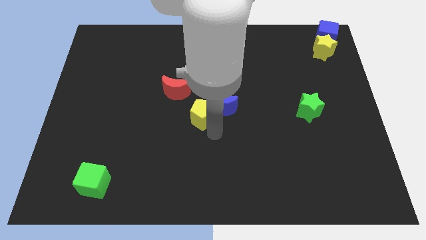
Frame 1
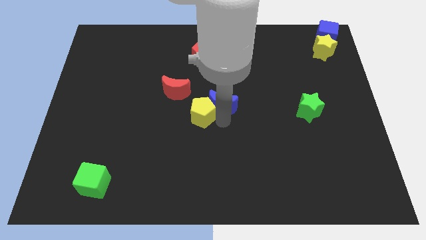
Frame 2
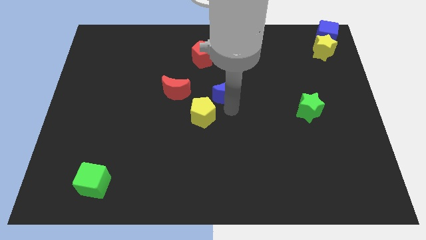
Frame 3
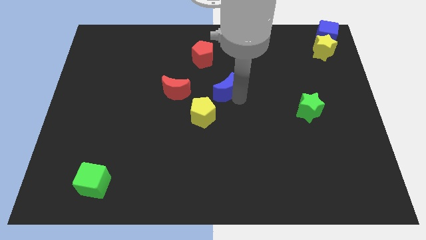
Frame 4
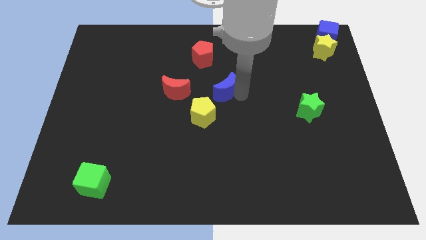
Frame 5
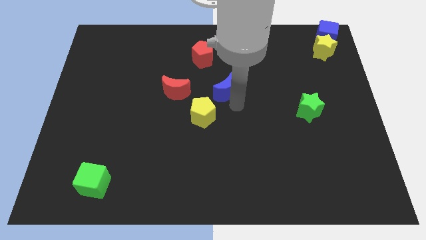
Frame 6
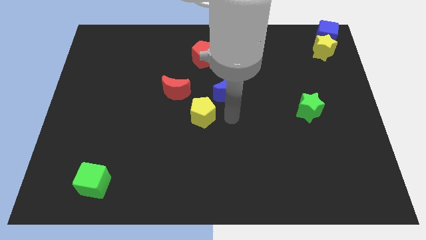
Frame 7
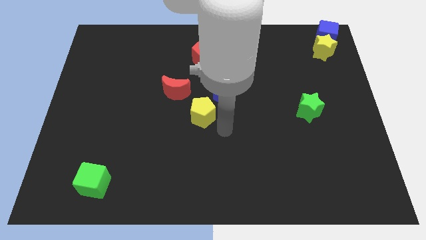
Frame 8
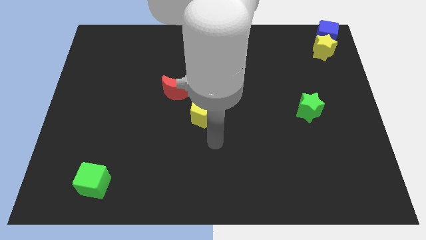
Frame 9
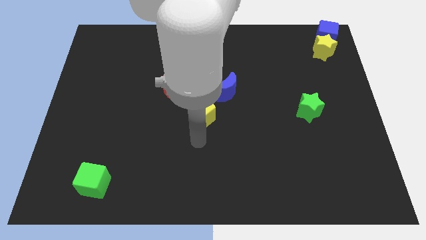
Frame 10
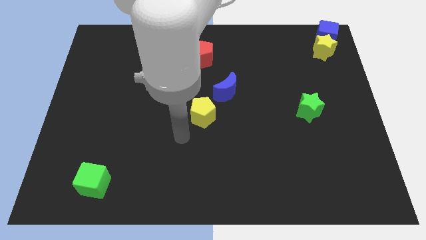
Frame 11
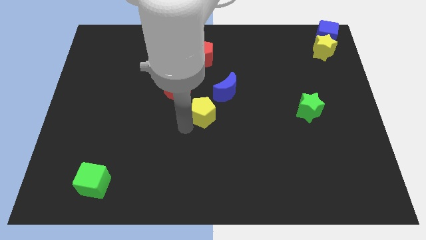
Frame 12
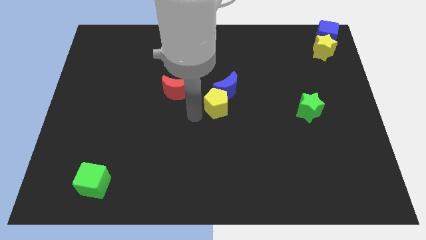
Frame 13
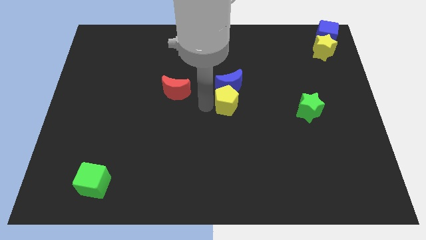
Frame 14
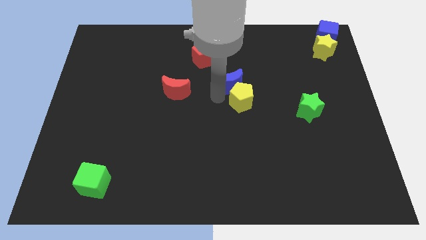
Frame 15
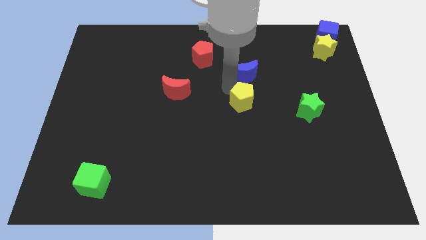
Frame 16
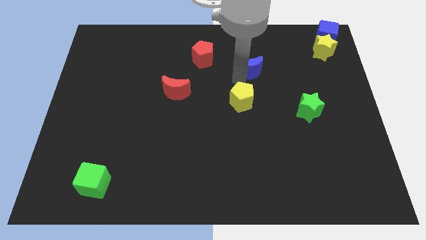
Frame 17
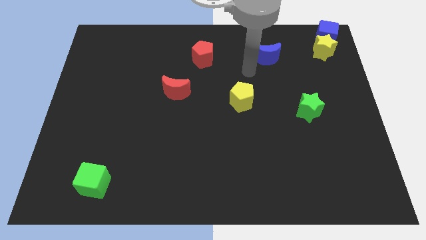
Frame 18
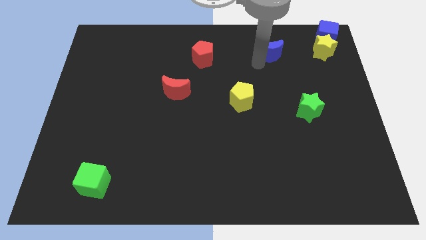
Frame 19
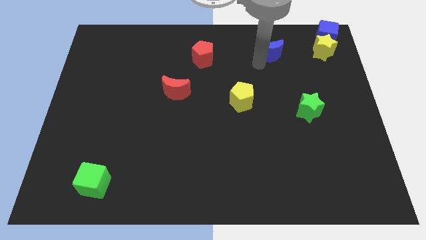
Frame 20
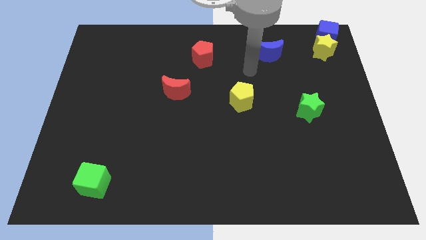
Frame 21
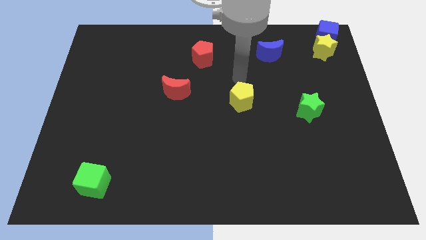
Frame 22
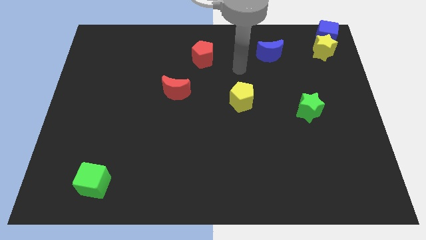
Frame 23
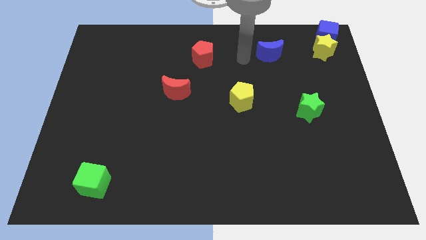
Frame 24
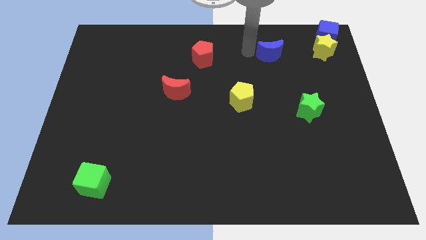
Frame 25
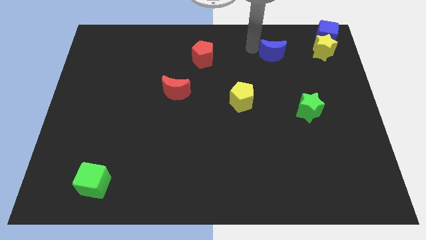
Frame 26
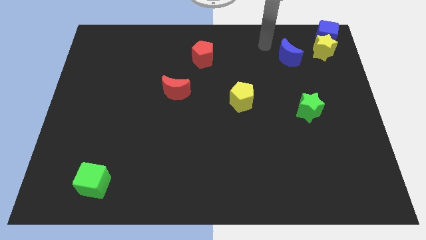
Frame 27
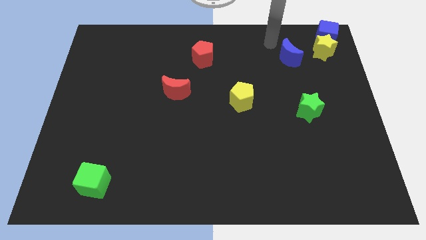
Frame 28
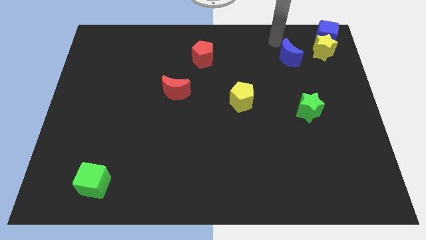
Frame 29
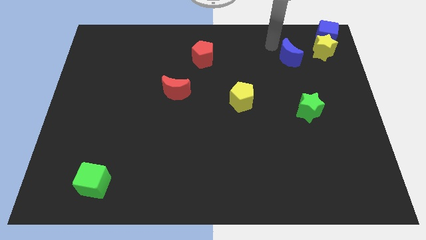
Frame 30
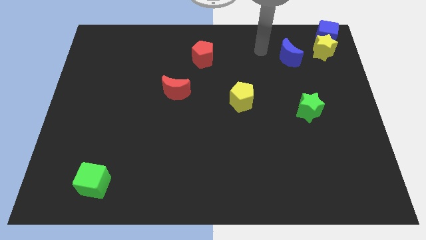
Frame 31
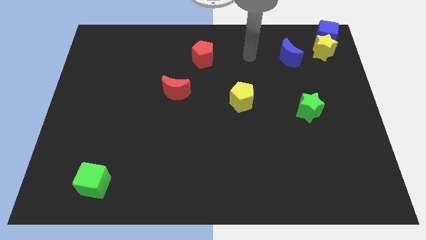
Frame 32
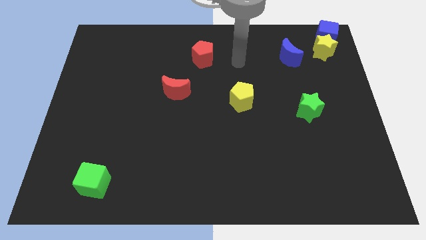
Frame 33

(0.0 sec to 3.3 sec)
move the blue crescent to the left of the yellow star

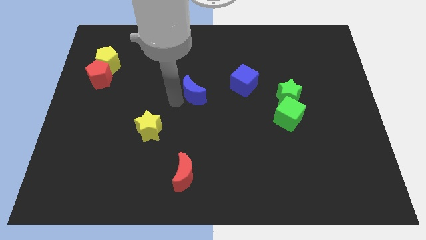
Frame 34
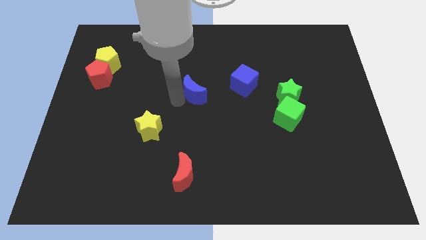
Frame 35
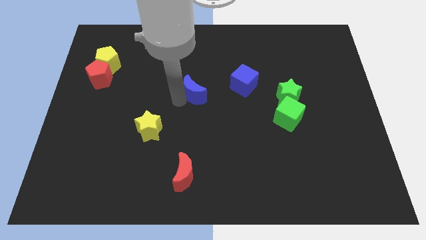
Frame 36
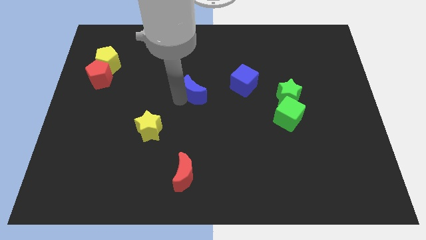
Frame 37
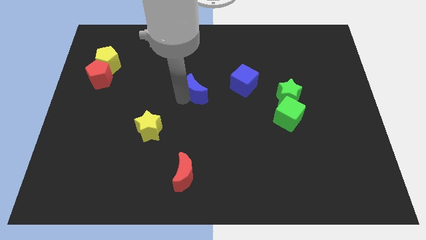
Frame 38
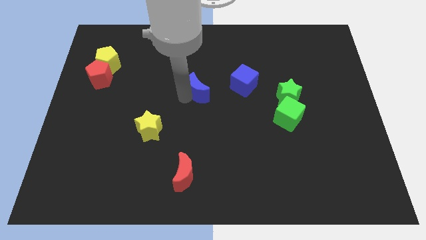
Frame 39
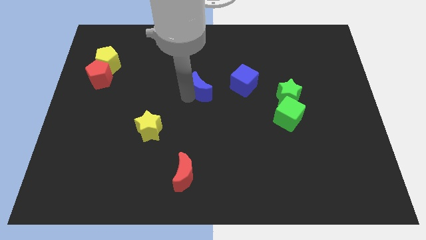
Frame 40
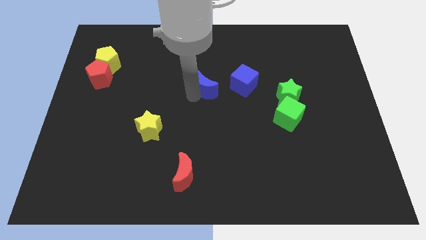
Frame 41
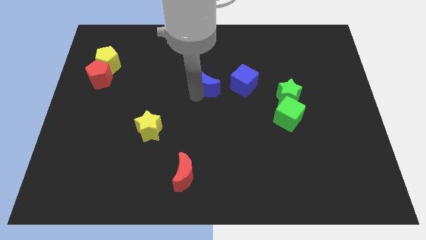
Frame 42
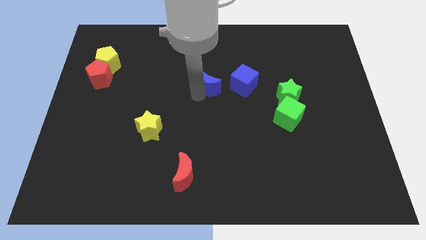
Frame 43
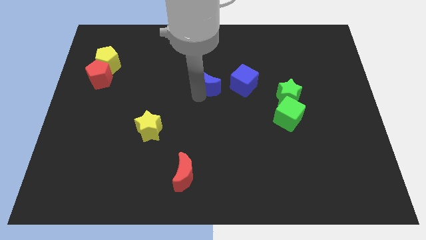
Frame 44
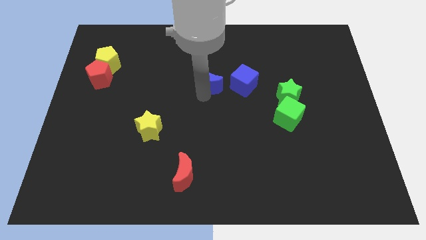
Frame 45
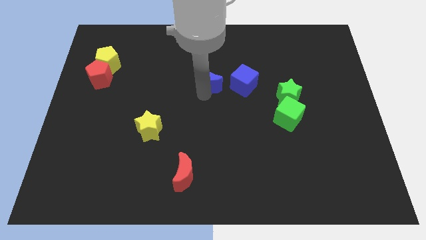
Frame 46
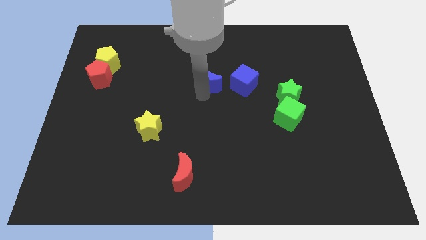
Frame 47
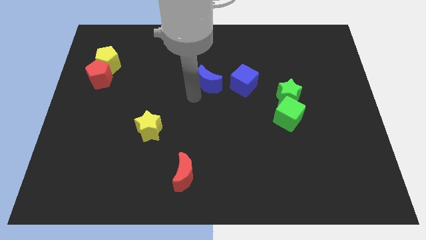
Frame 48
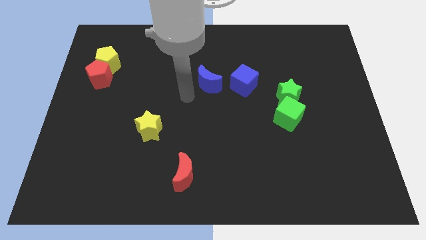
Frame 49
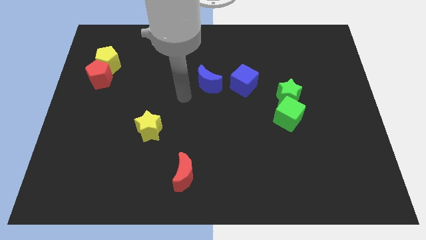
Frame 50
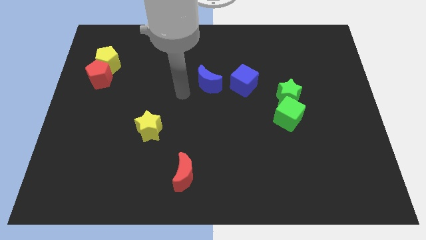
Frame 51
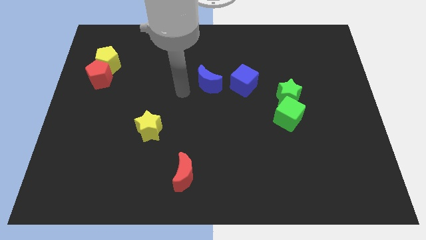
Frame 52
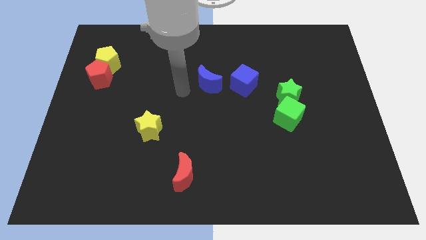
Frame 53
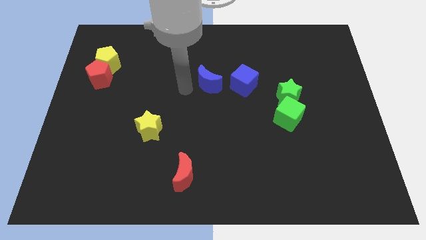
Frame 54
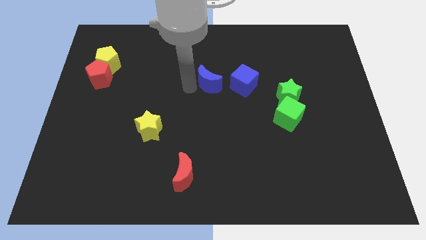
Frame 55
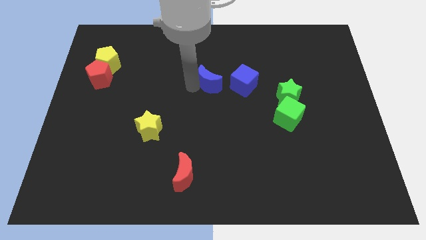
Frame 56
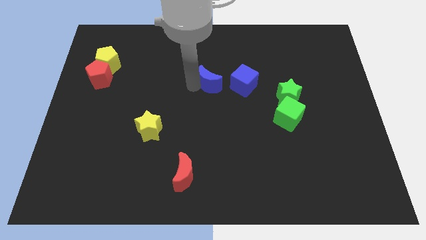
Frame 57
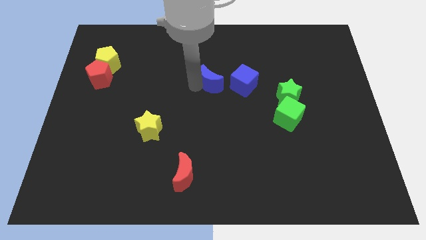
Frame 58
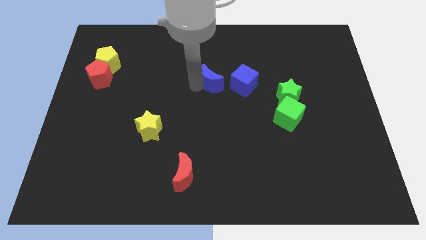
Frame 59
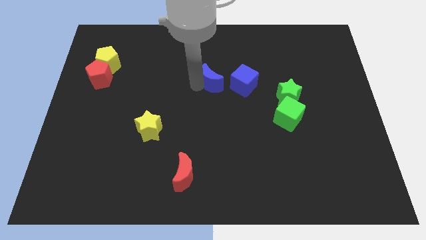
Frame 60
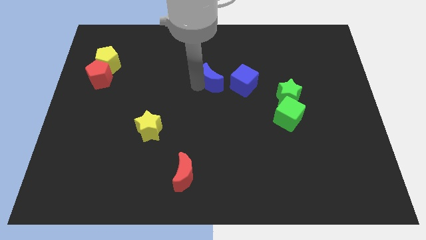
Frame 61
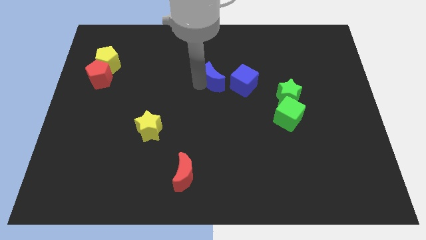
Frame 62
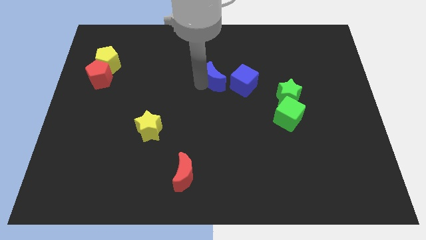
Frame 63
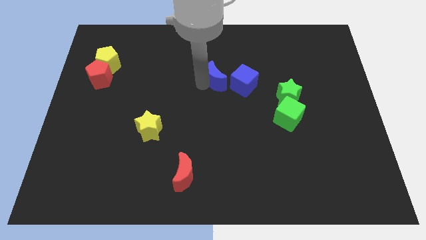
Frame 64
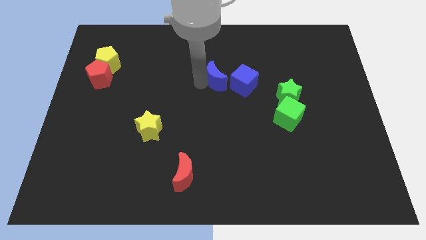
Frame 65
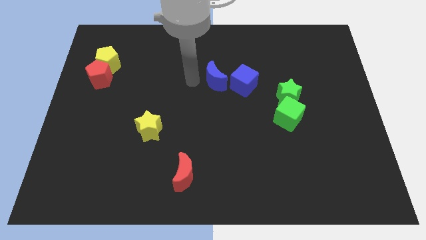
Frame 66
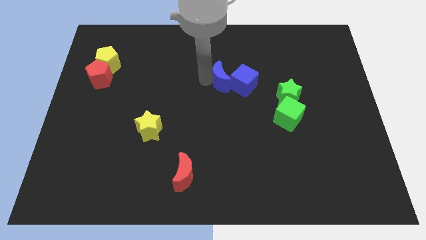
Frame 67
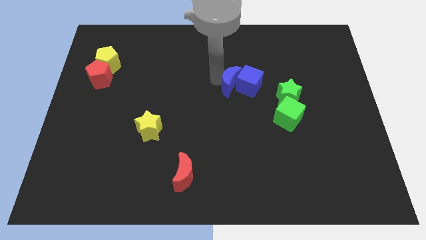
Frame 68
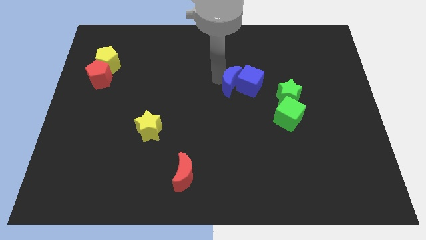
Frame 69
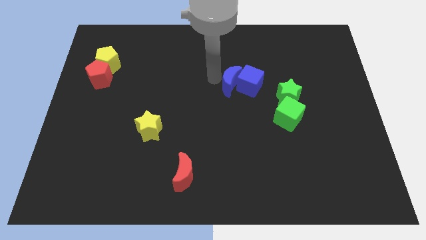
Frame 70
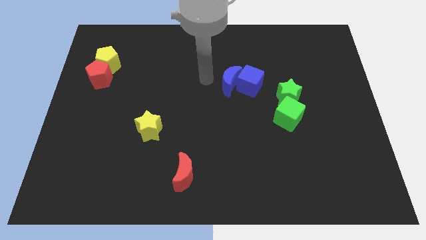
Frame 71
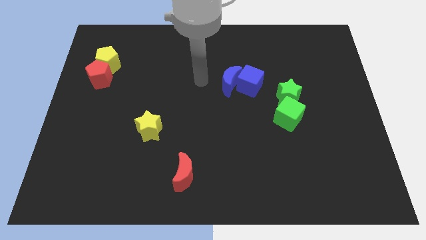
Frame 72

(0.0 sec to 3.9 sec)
push the blue crescent to the top left to the blue cube

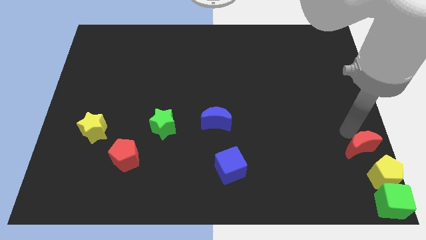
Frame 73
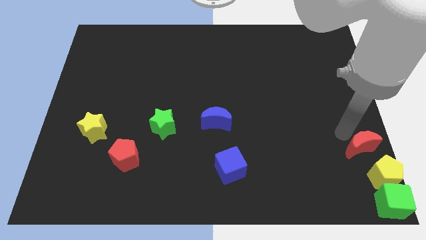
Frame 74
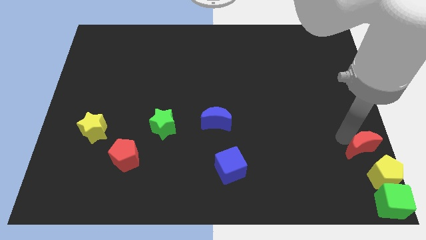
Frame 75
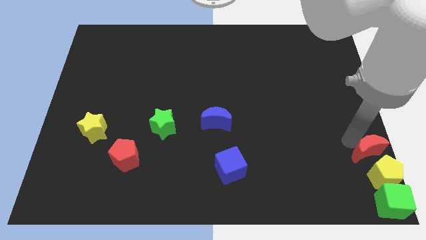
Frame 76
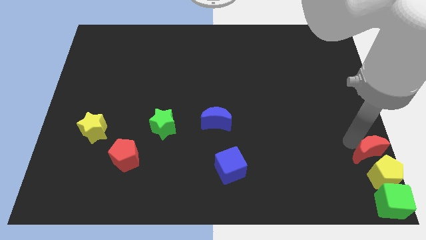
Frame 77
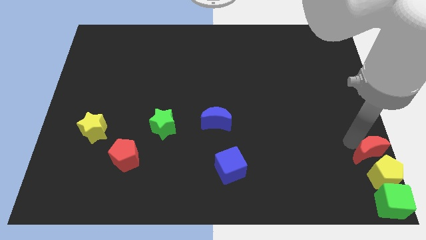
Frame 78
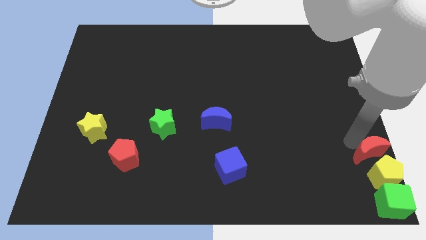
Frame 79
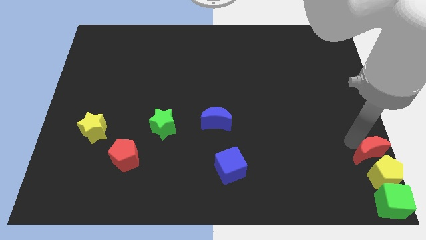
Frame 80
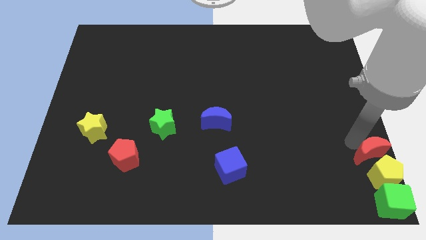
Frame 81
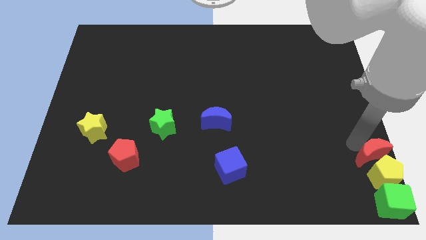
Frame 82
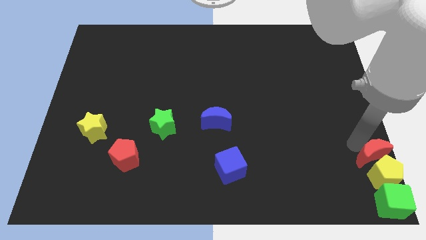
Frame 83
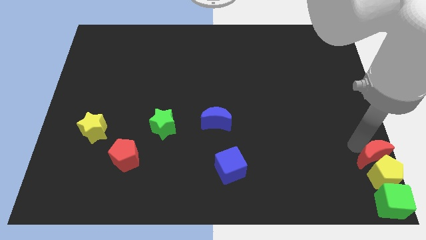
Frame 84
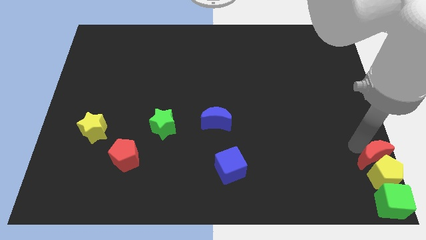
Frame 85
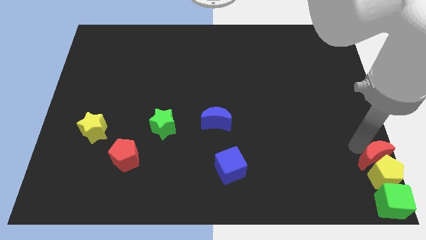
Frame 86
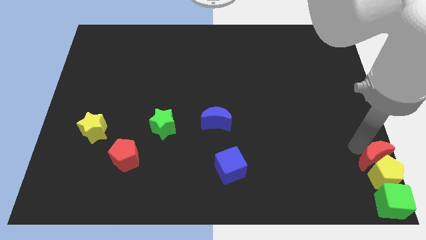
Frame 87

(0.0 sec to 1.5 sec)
move the red crescent close to the yellow pentagon

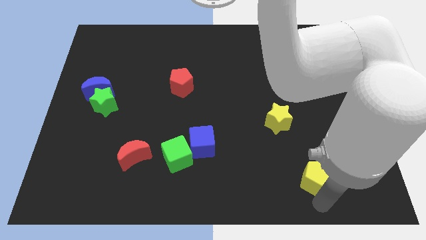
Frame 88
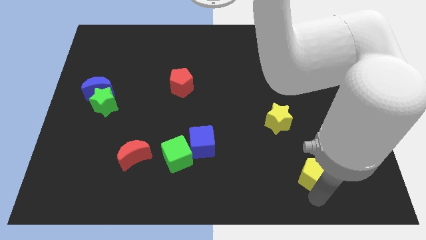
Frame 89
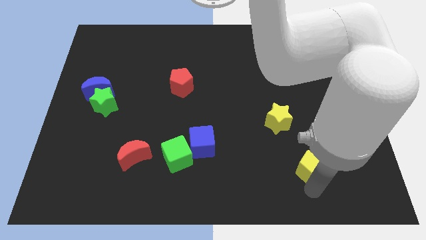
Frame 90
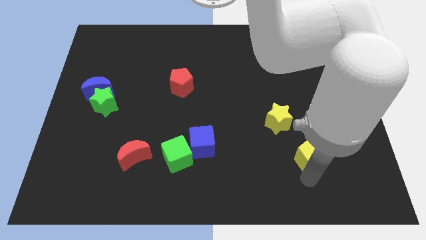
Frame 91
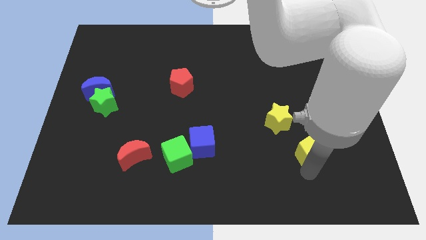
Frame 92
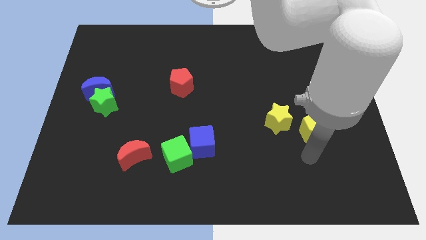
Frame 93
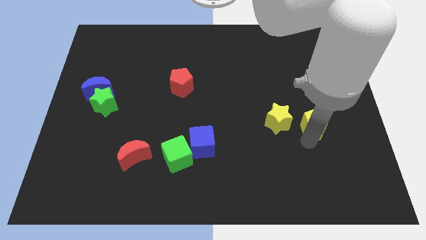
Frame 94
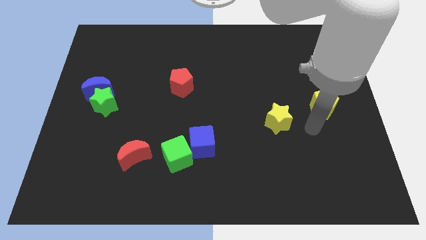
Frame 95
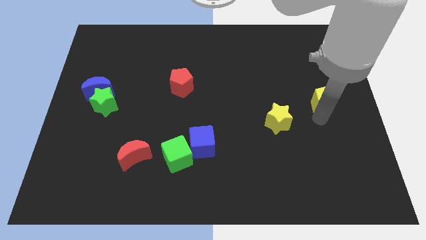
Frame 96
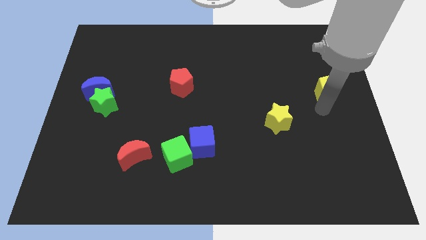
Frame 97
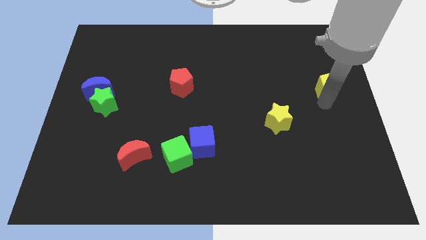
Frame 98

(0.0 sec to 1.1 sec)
push the yellow pentagon to the top right of the yellow star
